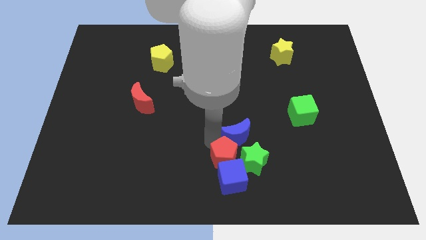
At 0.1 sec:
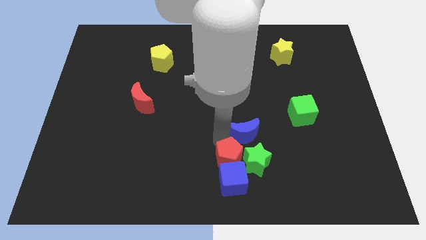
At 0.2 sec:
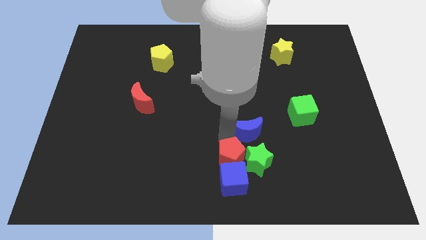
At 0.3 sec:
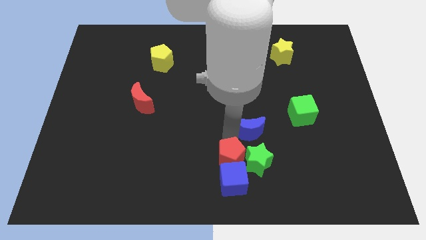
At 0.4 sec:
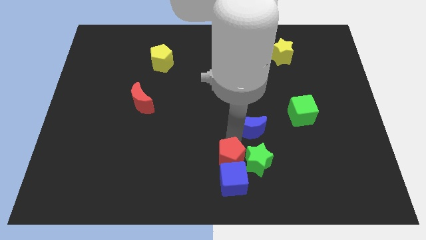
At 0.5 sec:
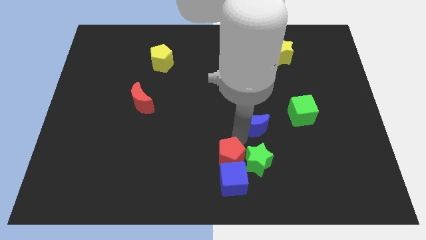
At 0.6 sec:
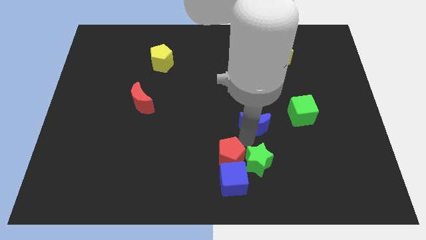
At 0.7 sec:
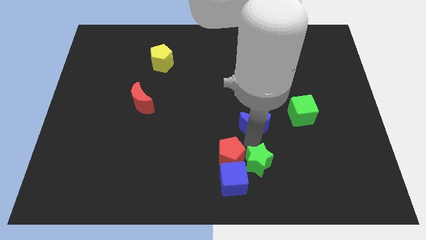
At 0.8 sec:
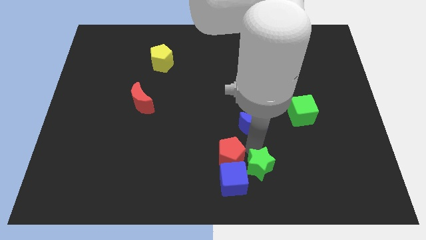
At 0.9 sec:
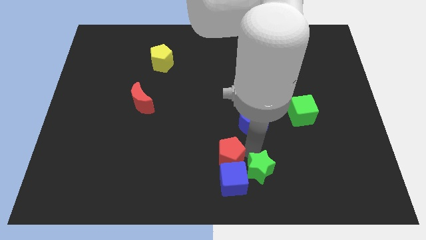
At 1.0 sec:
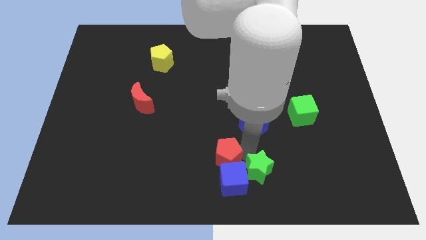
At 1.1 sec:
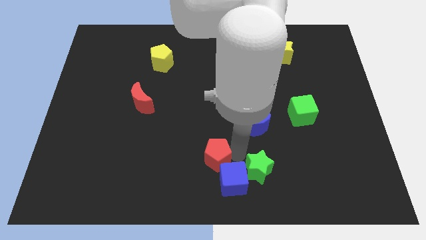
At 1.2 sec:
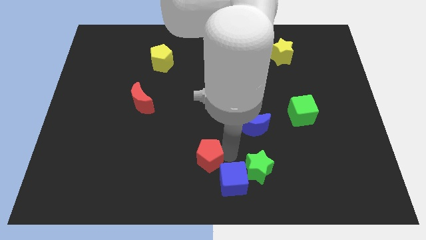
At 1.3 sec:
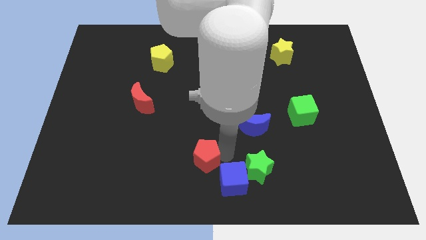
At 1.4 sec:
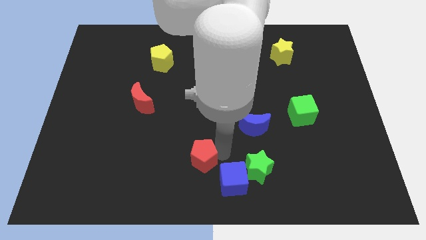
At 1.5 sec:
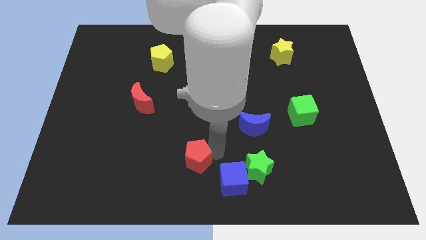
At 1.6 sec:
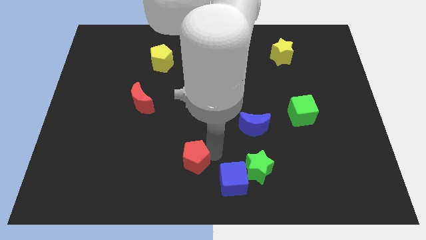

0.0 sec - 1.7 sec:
slightly push the red pentagon towards left

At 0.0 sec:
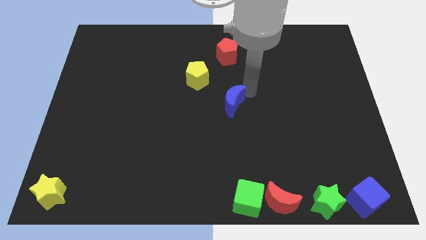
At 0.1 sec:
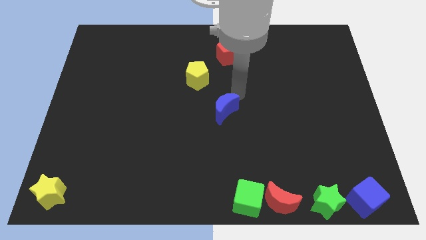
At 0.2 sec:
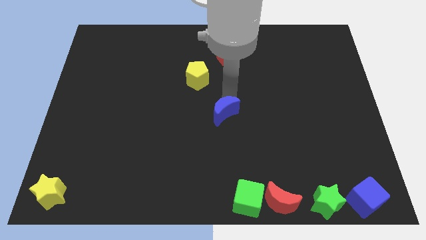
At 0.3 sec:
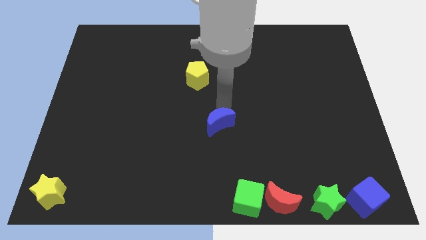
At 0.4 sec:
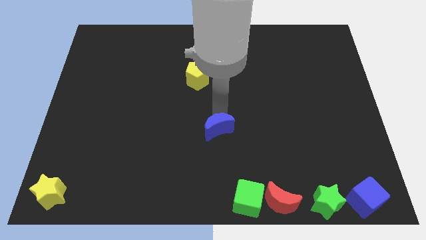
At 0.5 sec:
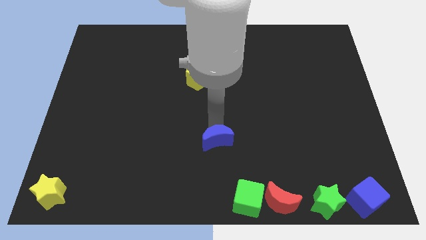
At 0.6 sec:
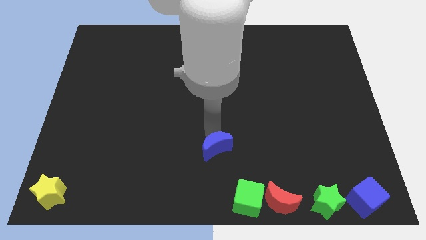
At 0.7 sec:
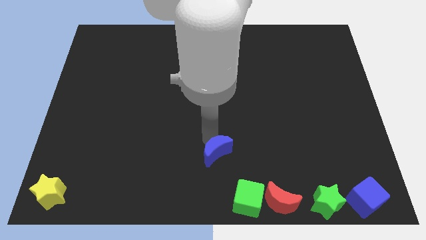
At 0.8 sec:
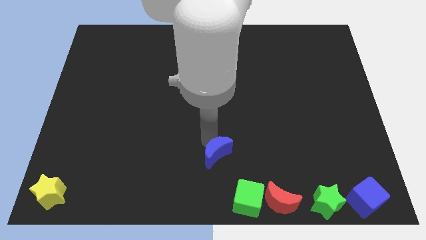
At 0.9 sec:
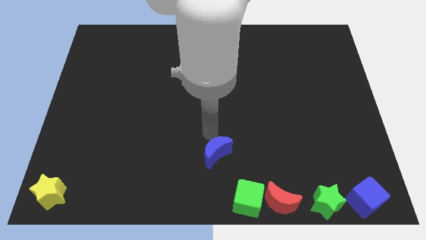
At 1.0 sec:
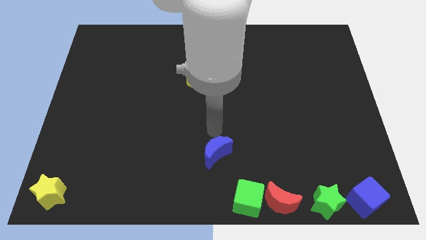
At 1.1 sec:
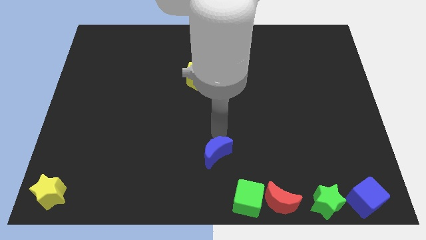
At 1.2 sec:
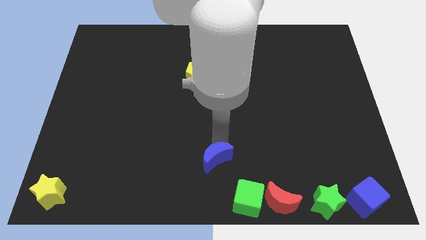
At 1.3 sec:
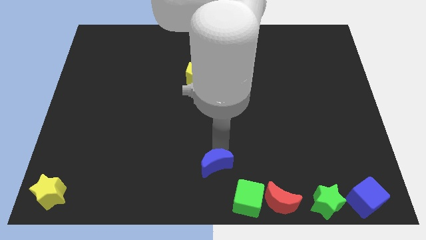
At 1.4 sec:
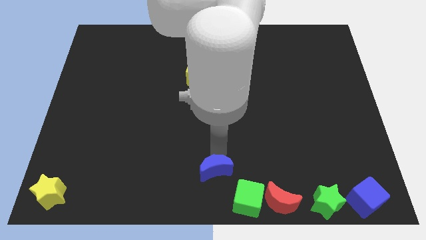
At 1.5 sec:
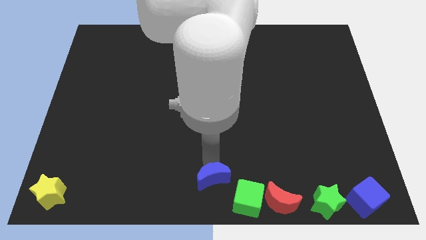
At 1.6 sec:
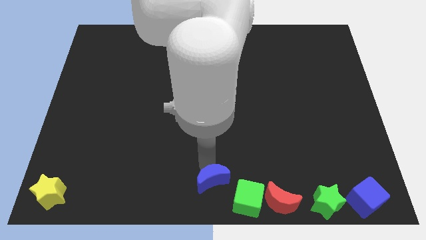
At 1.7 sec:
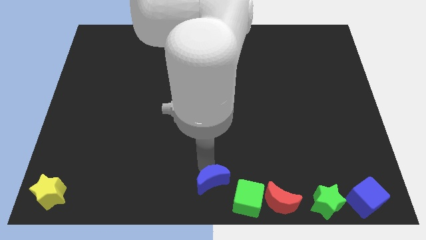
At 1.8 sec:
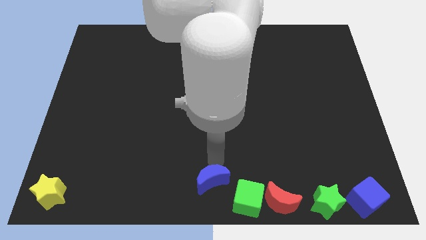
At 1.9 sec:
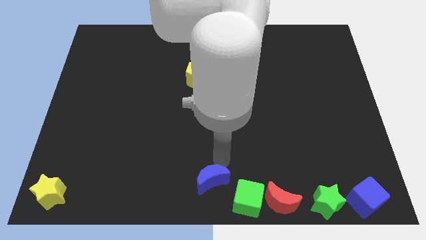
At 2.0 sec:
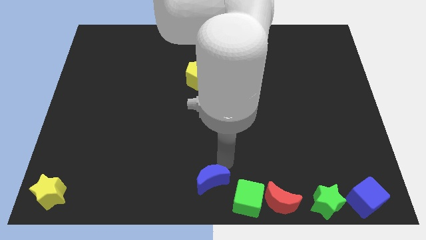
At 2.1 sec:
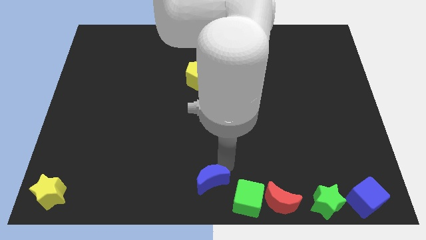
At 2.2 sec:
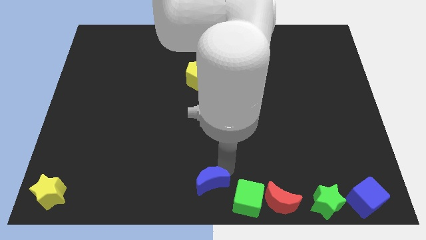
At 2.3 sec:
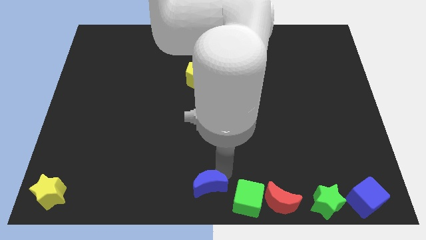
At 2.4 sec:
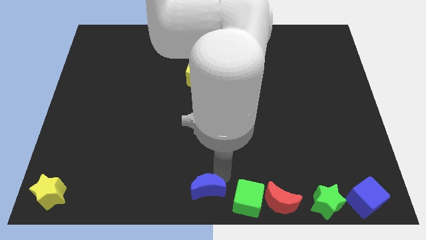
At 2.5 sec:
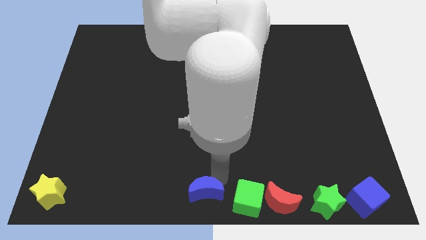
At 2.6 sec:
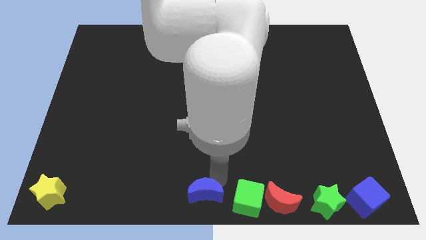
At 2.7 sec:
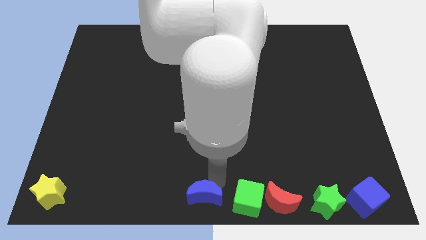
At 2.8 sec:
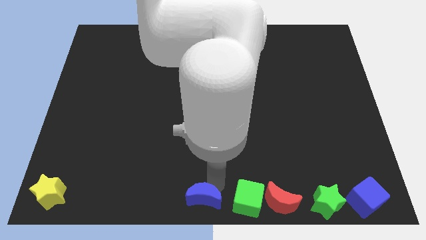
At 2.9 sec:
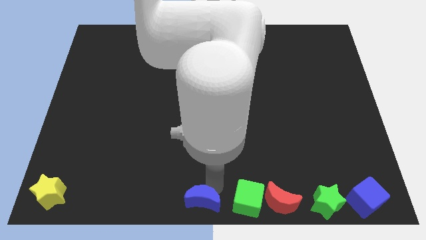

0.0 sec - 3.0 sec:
place the blue moon next to the green cube

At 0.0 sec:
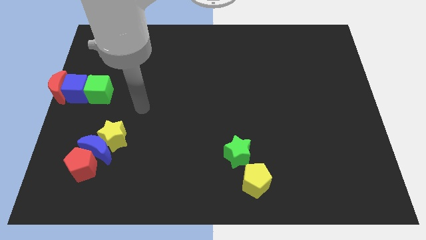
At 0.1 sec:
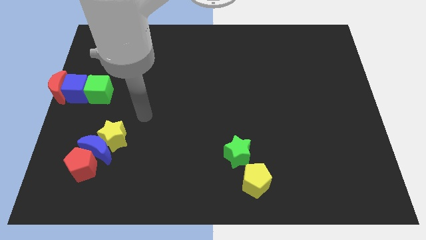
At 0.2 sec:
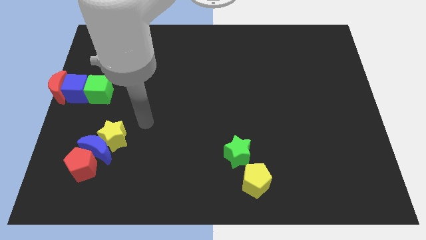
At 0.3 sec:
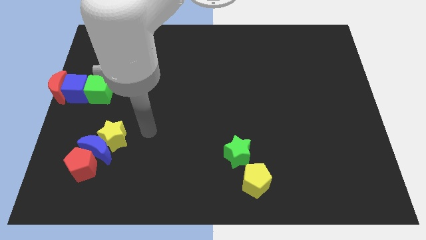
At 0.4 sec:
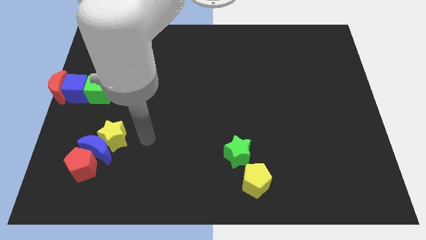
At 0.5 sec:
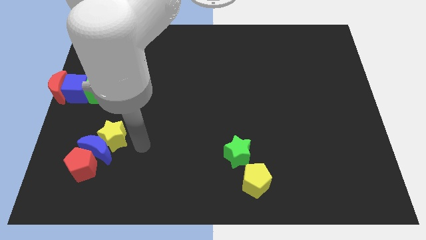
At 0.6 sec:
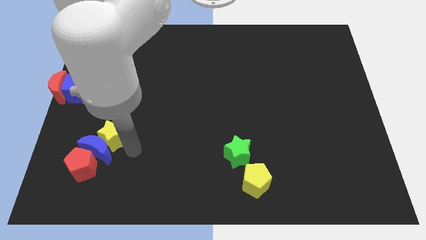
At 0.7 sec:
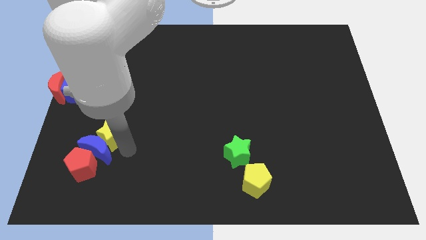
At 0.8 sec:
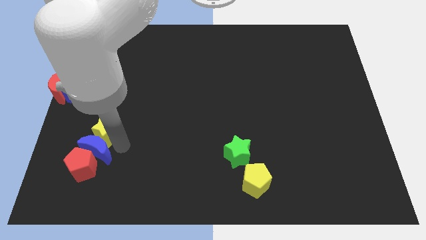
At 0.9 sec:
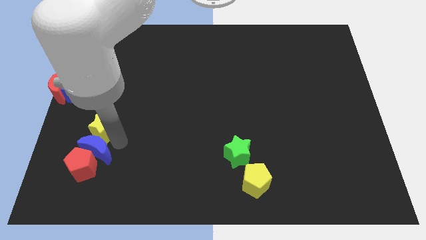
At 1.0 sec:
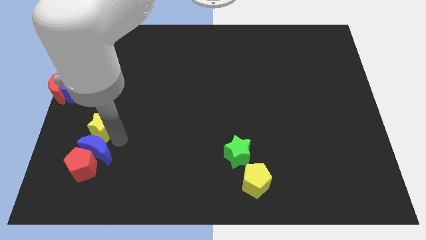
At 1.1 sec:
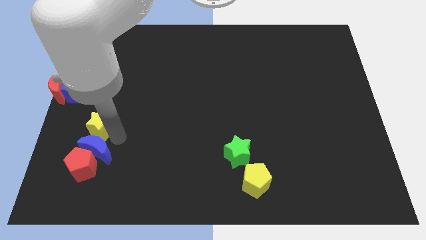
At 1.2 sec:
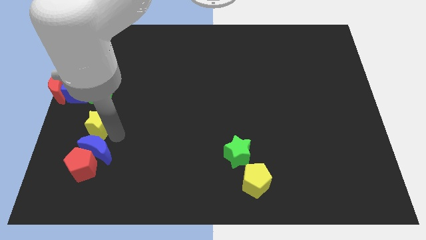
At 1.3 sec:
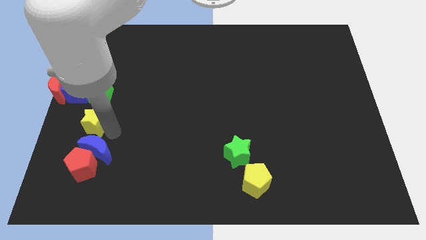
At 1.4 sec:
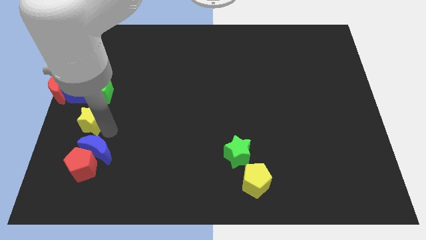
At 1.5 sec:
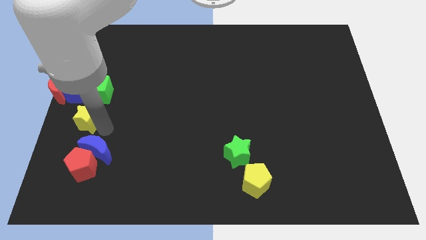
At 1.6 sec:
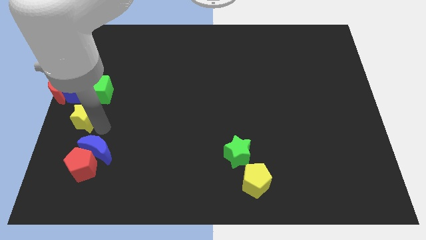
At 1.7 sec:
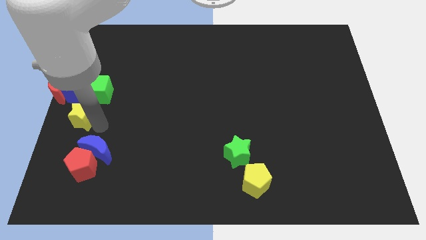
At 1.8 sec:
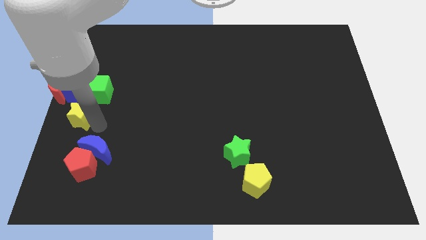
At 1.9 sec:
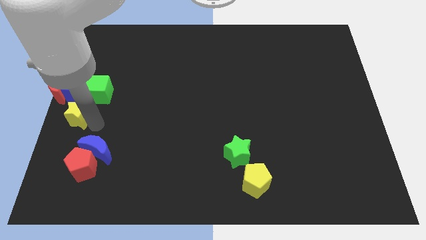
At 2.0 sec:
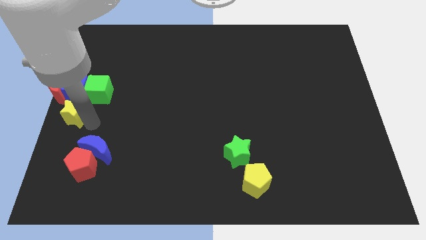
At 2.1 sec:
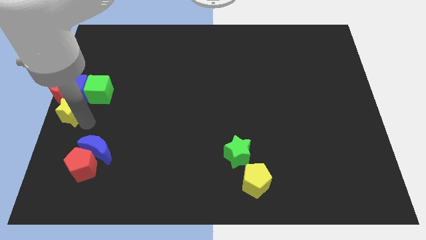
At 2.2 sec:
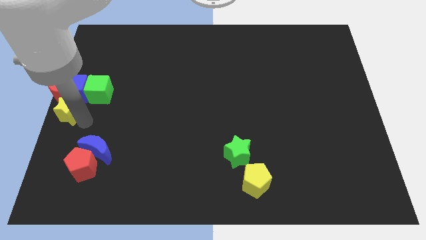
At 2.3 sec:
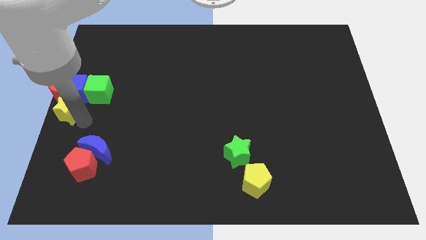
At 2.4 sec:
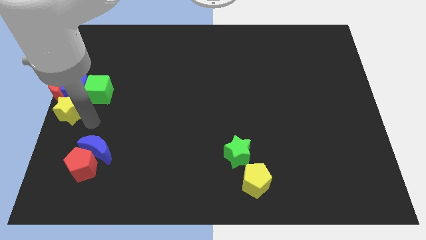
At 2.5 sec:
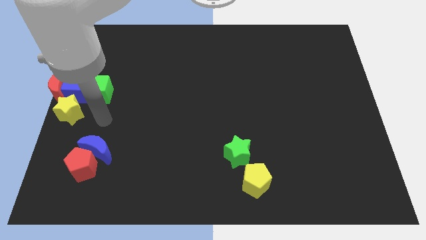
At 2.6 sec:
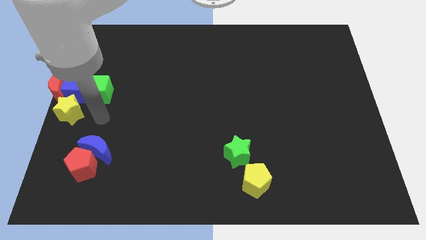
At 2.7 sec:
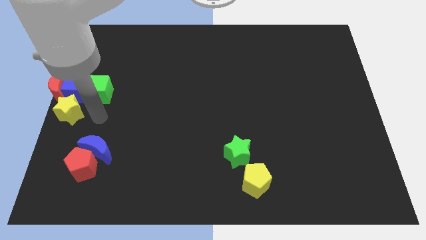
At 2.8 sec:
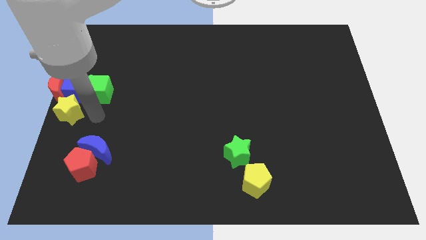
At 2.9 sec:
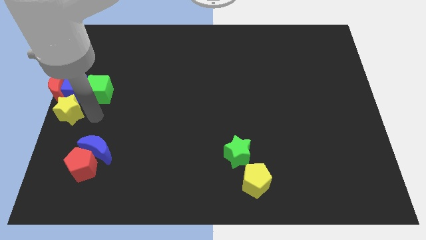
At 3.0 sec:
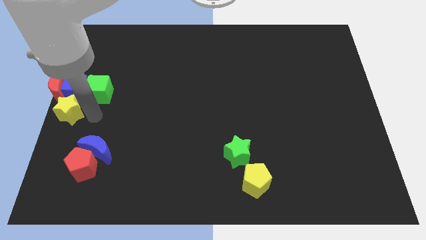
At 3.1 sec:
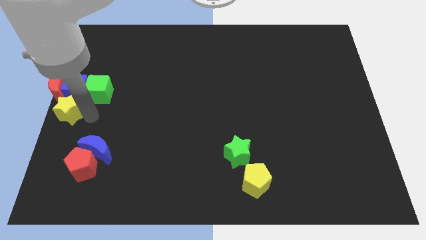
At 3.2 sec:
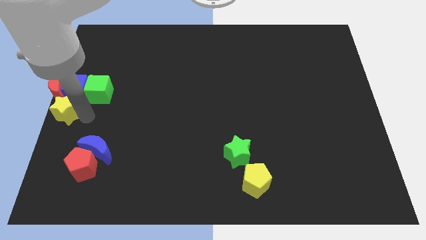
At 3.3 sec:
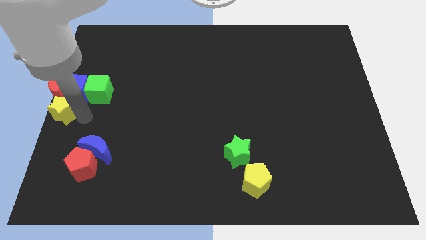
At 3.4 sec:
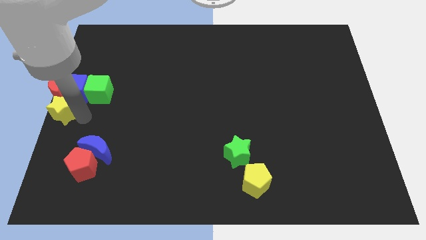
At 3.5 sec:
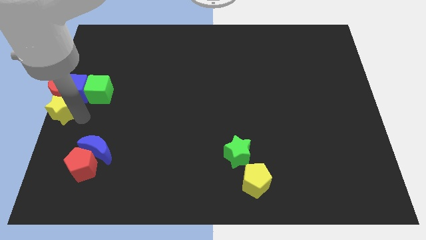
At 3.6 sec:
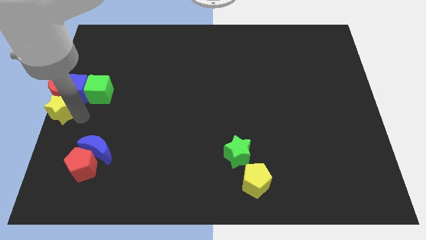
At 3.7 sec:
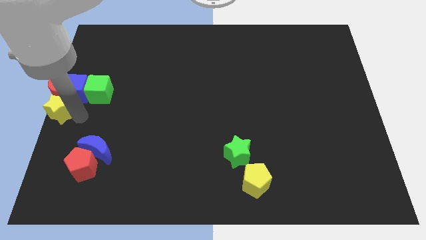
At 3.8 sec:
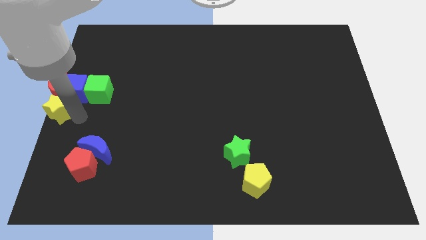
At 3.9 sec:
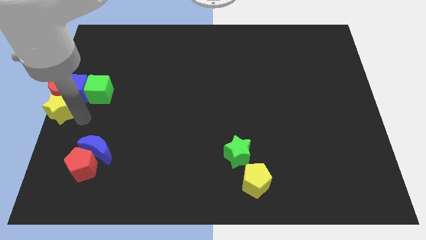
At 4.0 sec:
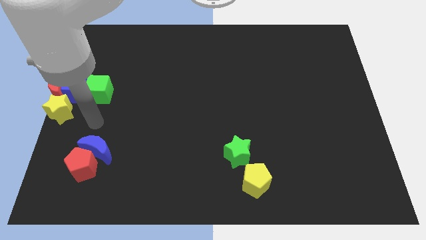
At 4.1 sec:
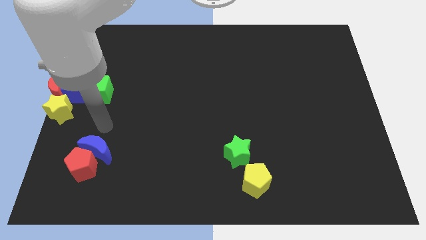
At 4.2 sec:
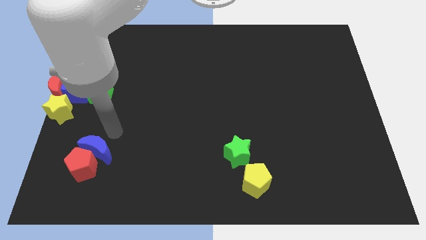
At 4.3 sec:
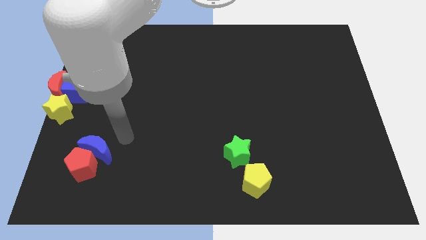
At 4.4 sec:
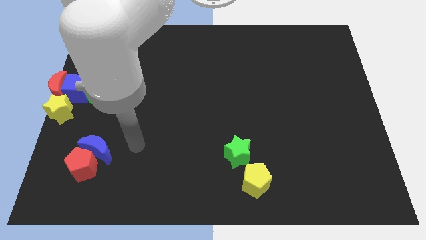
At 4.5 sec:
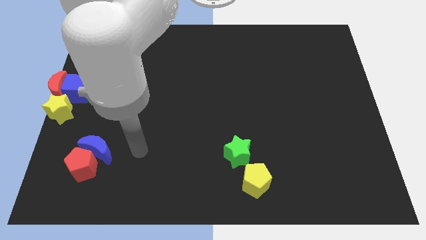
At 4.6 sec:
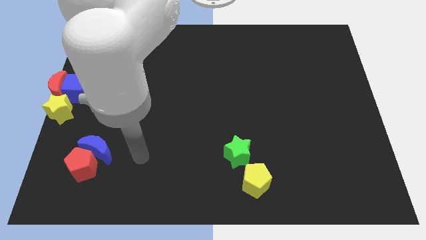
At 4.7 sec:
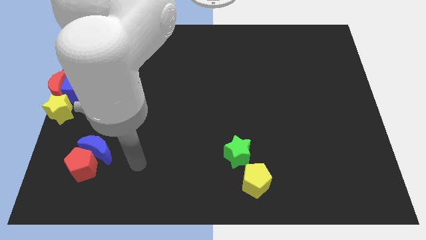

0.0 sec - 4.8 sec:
push the yellow star to the bottom side of the red moon
